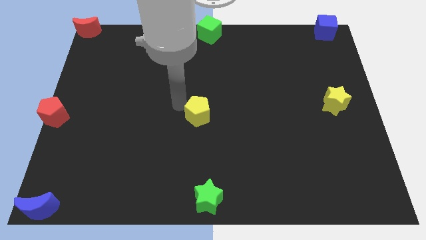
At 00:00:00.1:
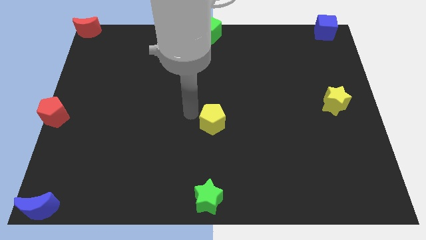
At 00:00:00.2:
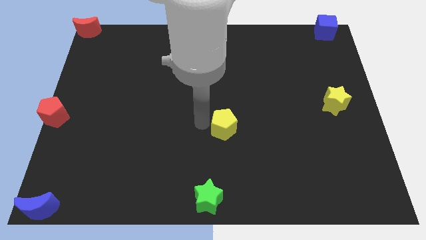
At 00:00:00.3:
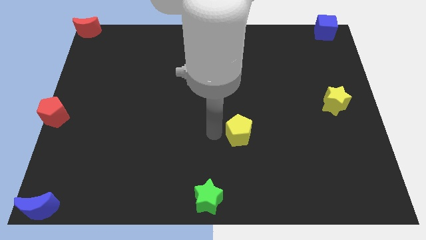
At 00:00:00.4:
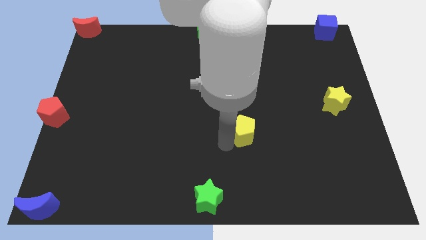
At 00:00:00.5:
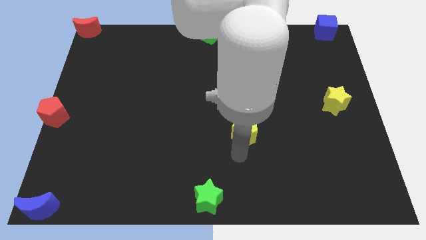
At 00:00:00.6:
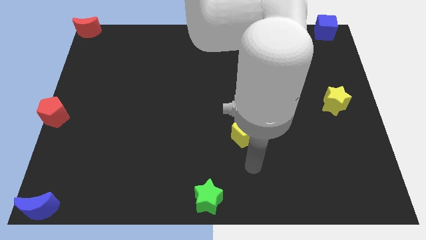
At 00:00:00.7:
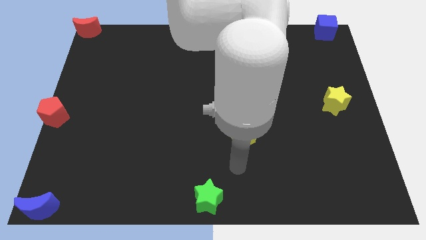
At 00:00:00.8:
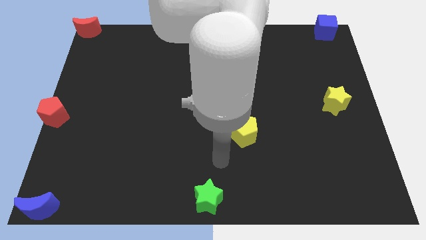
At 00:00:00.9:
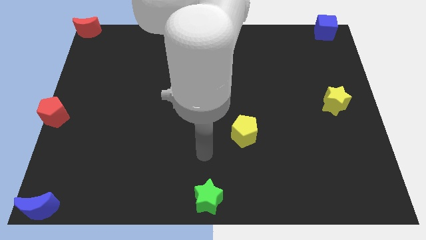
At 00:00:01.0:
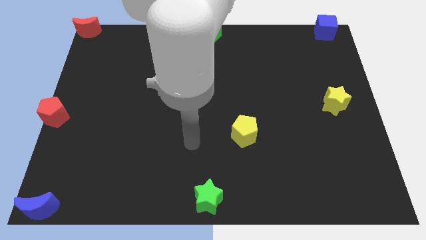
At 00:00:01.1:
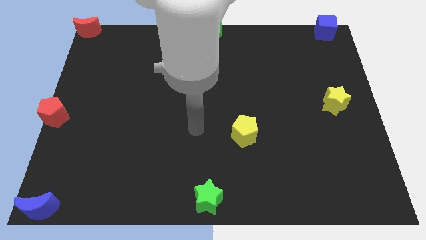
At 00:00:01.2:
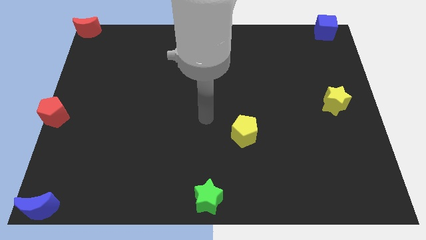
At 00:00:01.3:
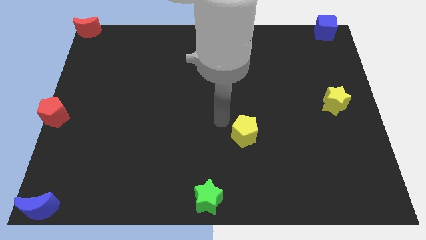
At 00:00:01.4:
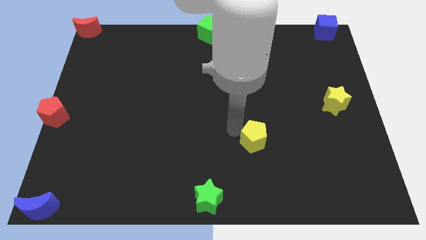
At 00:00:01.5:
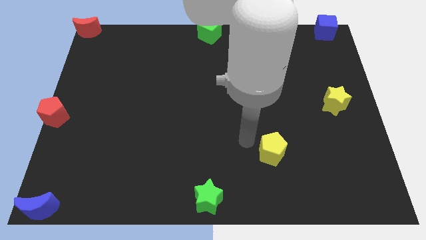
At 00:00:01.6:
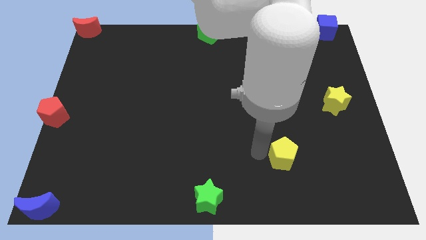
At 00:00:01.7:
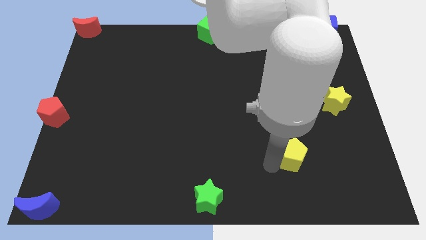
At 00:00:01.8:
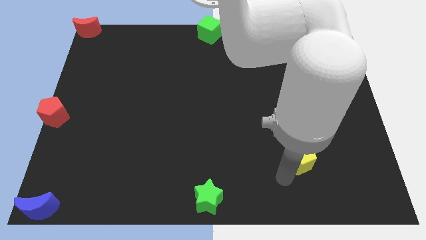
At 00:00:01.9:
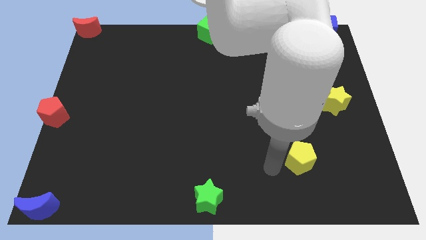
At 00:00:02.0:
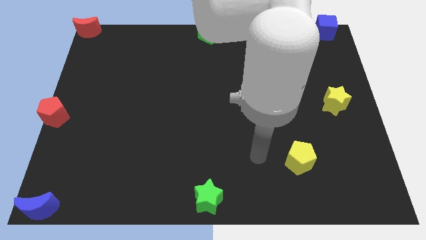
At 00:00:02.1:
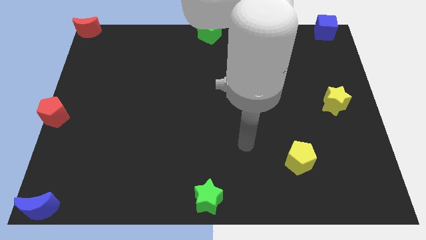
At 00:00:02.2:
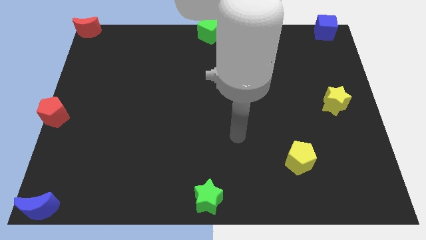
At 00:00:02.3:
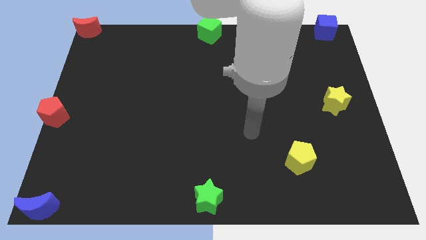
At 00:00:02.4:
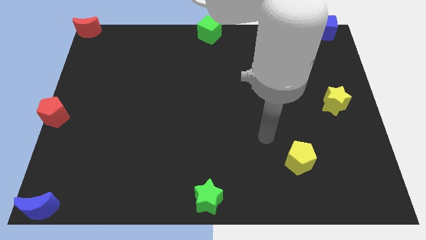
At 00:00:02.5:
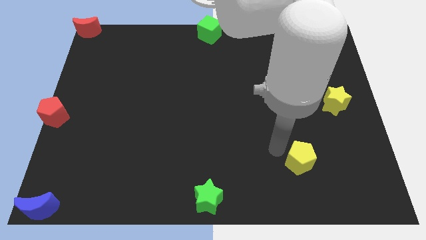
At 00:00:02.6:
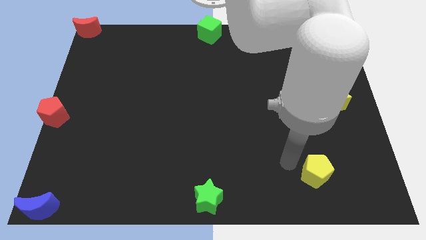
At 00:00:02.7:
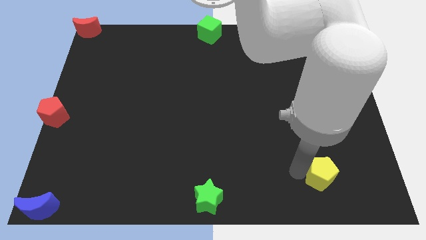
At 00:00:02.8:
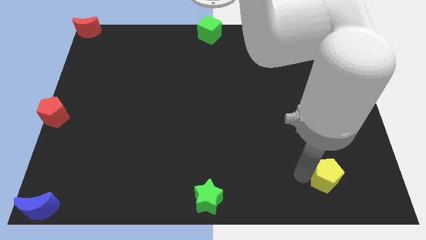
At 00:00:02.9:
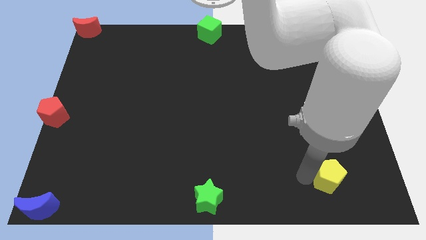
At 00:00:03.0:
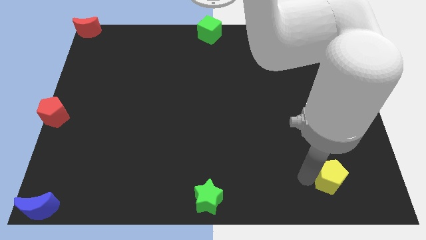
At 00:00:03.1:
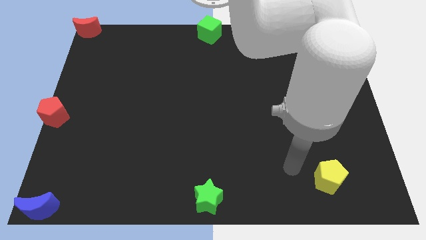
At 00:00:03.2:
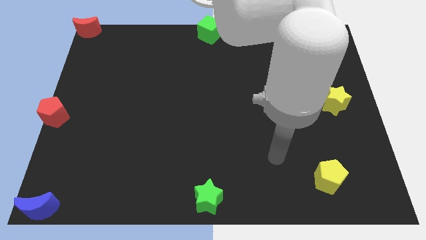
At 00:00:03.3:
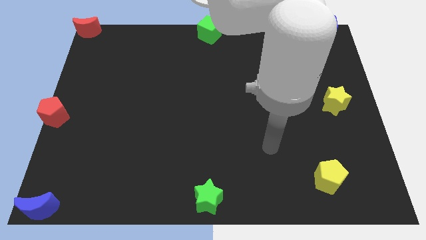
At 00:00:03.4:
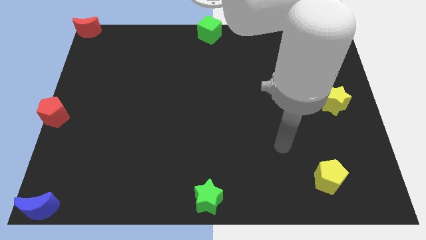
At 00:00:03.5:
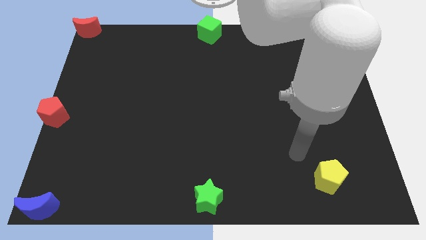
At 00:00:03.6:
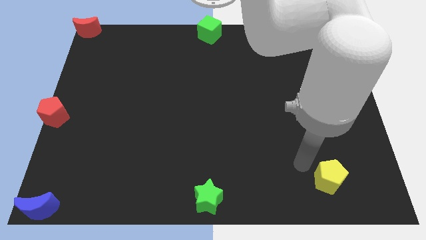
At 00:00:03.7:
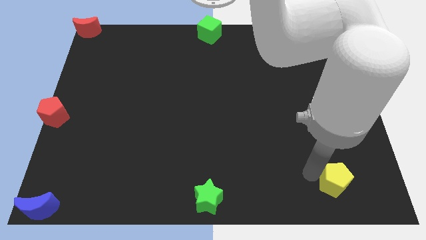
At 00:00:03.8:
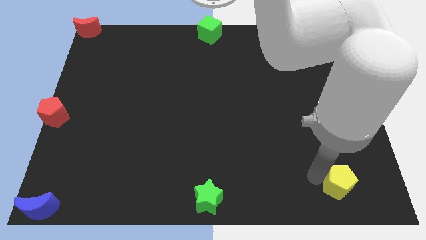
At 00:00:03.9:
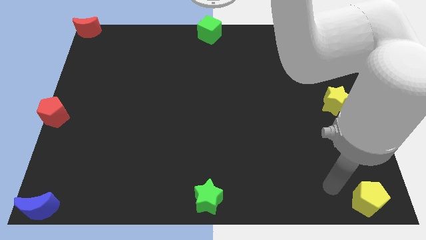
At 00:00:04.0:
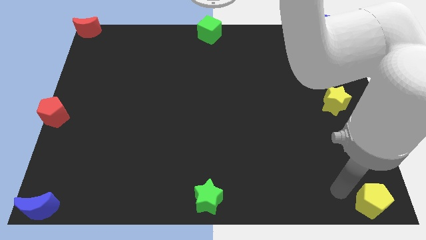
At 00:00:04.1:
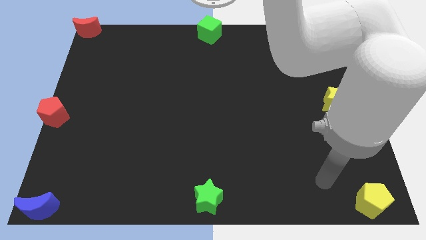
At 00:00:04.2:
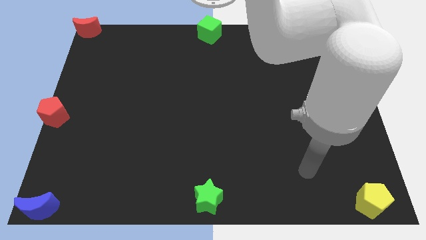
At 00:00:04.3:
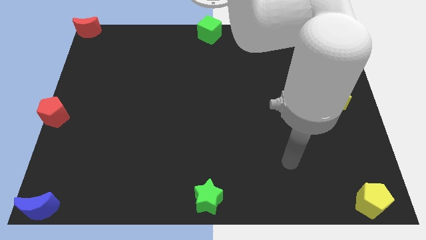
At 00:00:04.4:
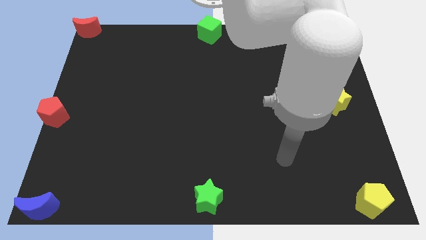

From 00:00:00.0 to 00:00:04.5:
place the yellow pentagon to the bottom right corner of the board

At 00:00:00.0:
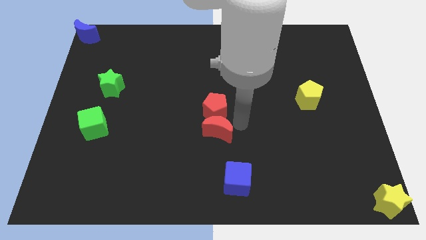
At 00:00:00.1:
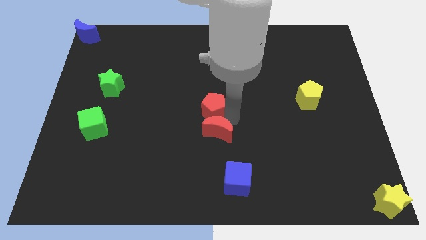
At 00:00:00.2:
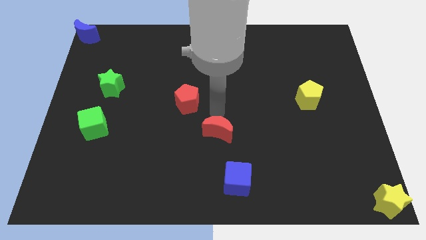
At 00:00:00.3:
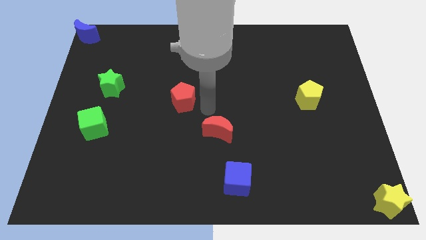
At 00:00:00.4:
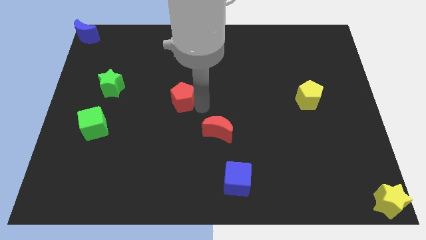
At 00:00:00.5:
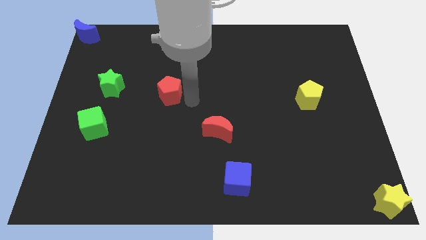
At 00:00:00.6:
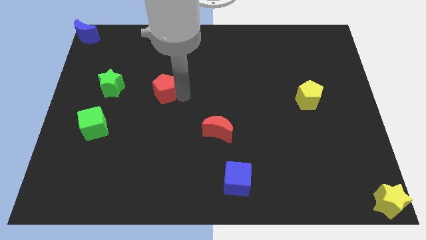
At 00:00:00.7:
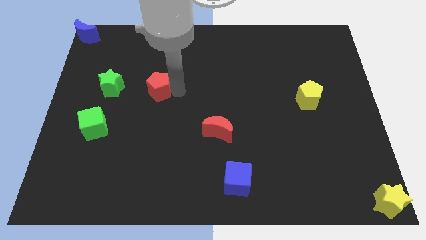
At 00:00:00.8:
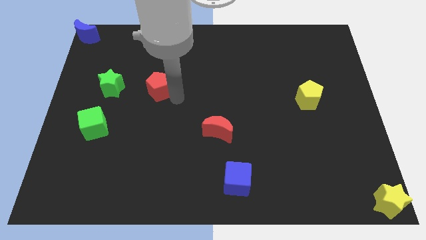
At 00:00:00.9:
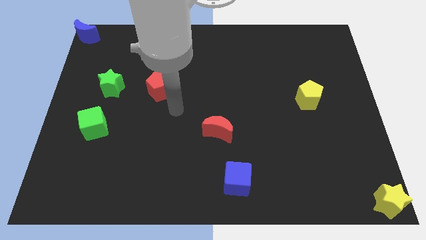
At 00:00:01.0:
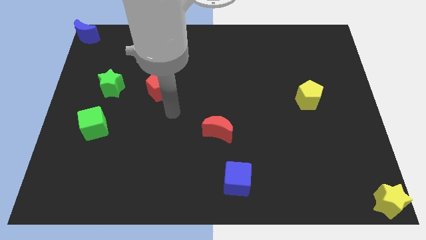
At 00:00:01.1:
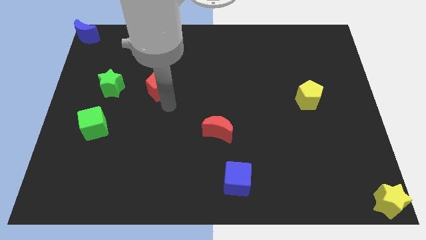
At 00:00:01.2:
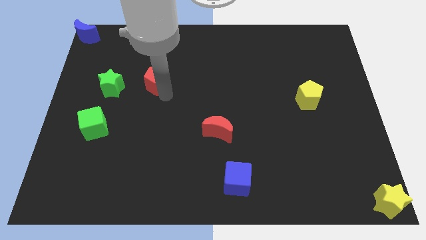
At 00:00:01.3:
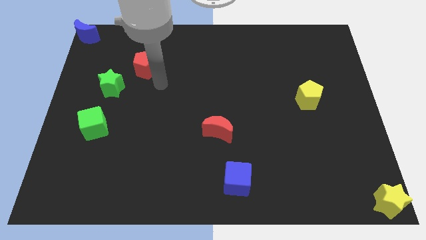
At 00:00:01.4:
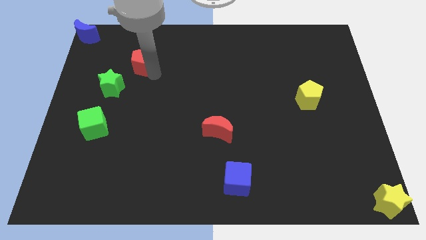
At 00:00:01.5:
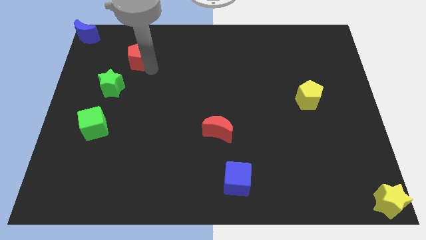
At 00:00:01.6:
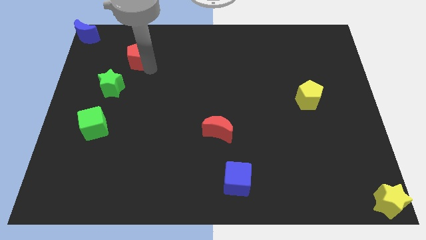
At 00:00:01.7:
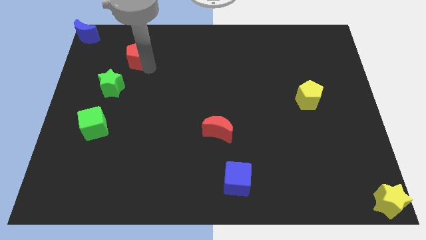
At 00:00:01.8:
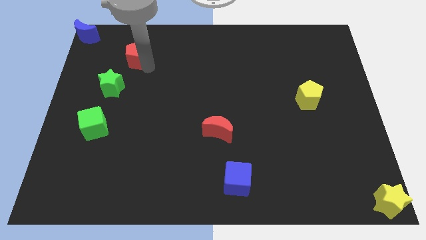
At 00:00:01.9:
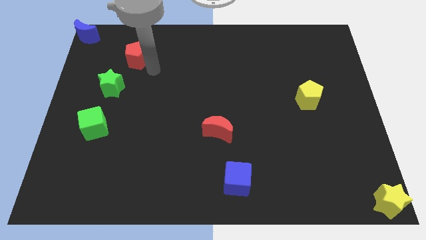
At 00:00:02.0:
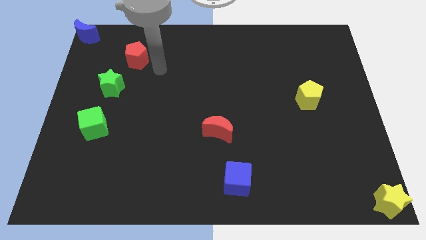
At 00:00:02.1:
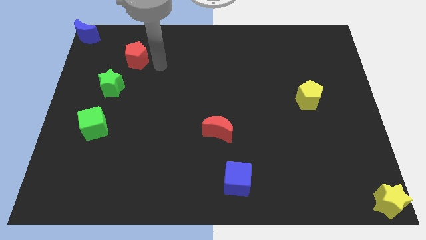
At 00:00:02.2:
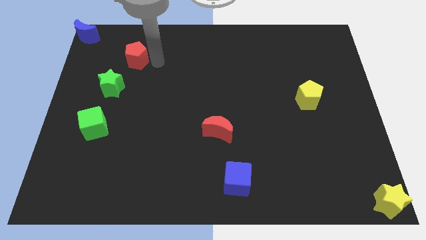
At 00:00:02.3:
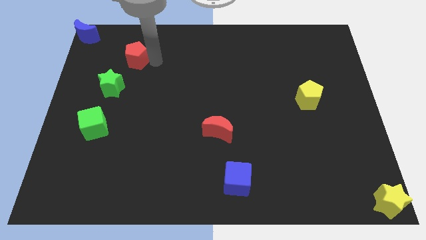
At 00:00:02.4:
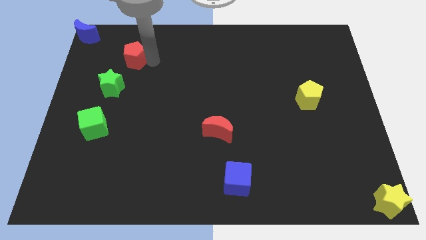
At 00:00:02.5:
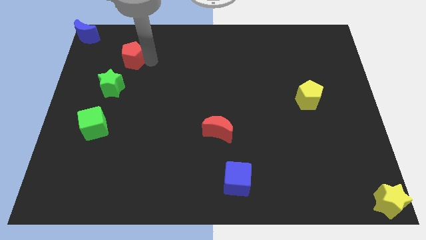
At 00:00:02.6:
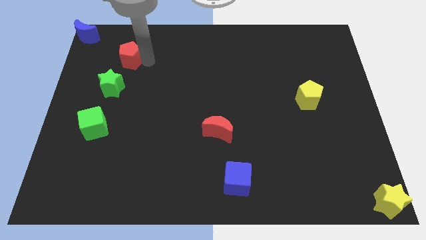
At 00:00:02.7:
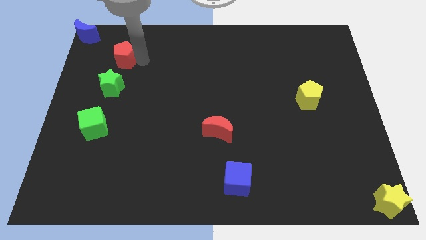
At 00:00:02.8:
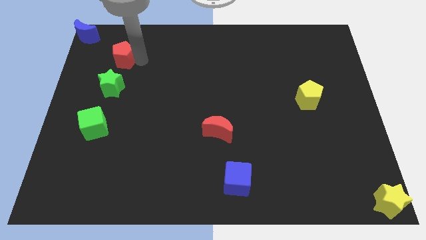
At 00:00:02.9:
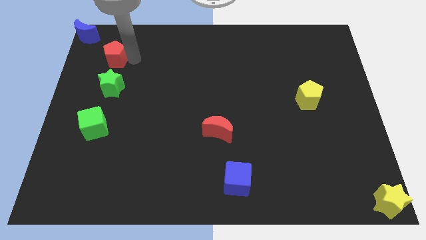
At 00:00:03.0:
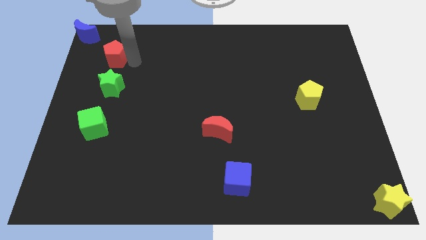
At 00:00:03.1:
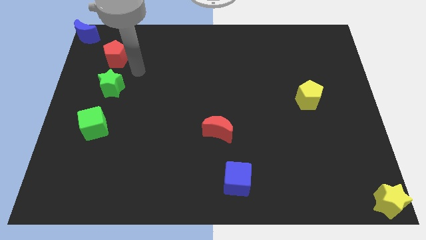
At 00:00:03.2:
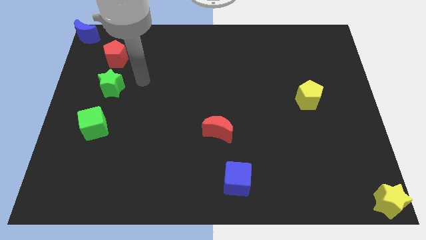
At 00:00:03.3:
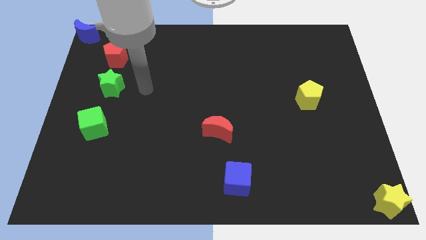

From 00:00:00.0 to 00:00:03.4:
place the red pentagon above the green star

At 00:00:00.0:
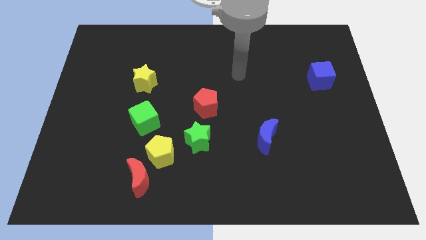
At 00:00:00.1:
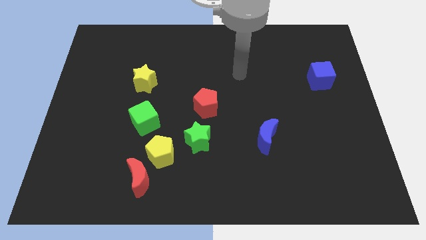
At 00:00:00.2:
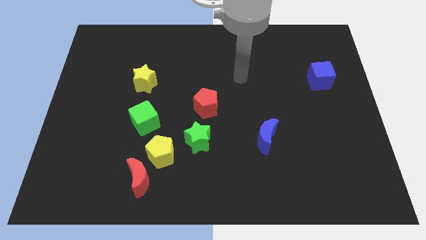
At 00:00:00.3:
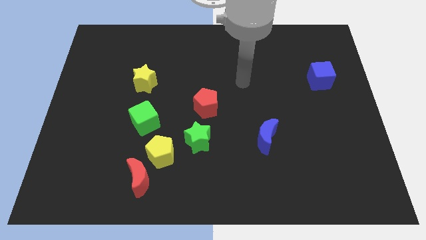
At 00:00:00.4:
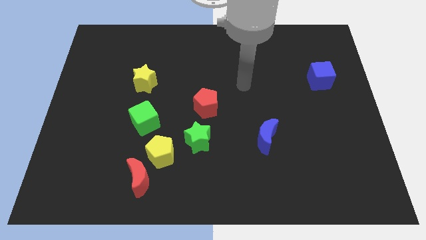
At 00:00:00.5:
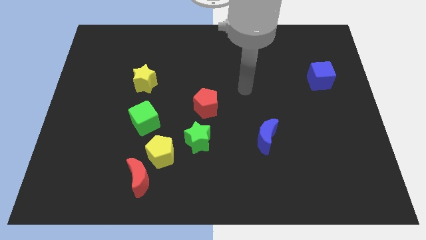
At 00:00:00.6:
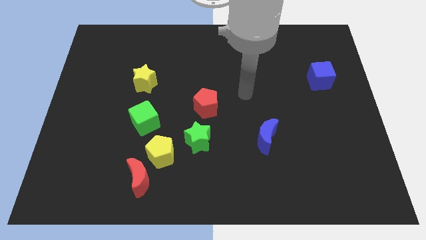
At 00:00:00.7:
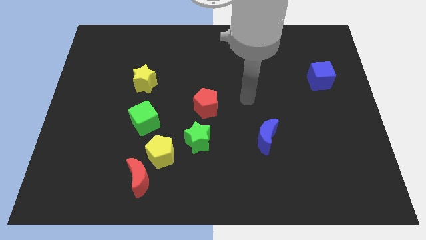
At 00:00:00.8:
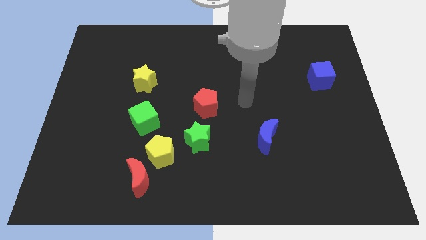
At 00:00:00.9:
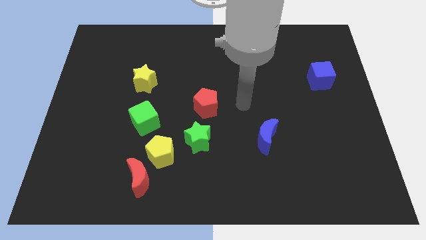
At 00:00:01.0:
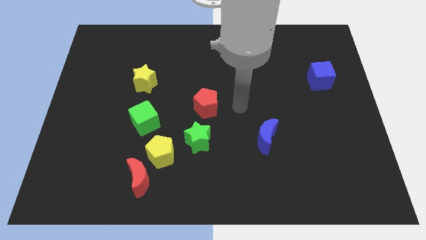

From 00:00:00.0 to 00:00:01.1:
slide the arm to the center of the board
